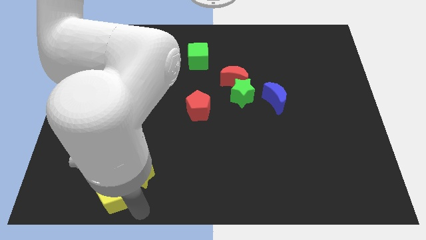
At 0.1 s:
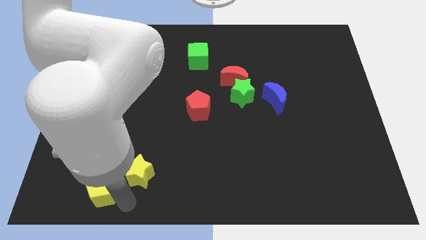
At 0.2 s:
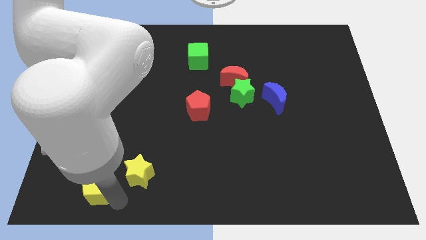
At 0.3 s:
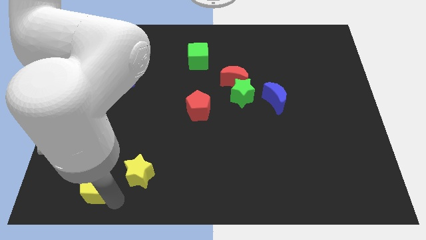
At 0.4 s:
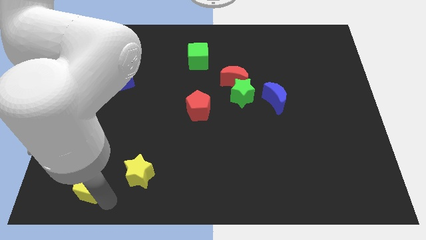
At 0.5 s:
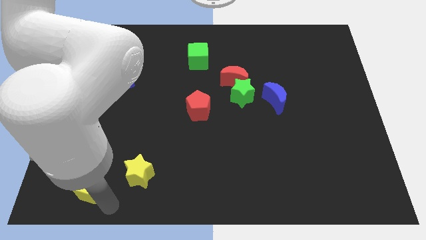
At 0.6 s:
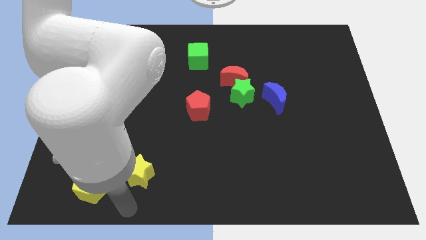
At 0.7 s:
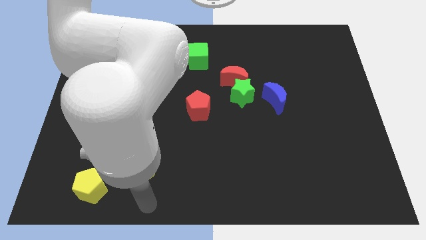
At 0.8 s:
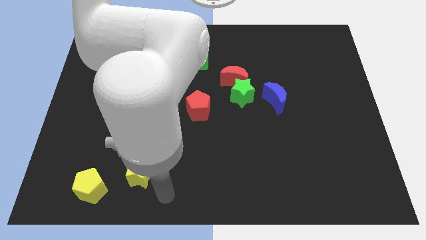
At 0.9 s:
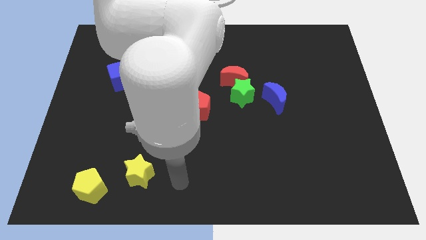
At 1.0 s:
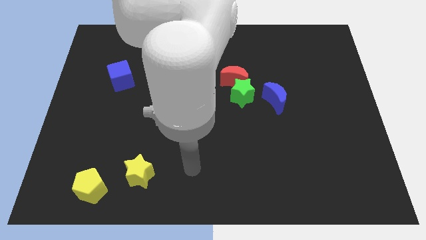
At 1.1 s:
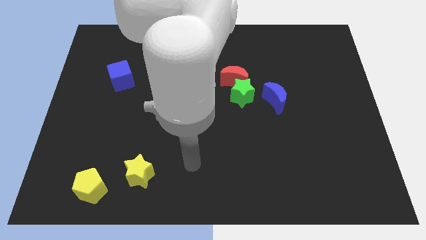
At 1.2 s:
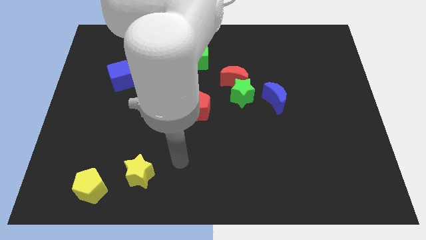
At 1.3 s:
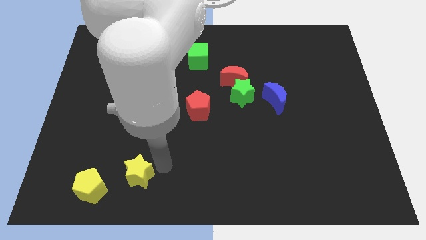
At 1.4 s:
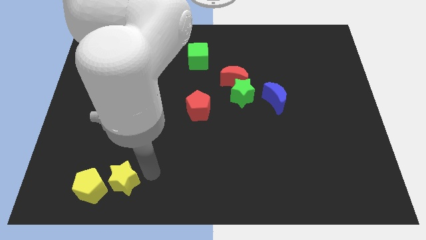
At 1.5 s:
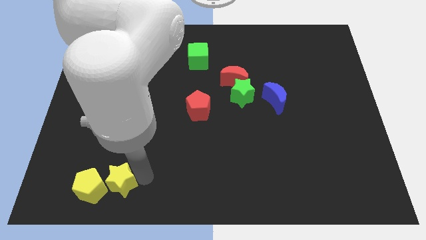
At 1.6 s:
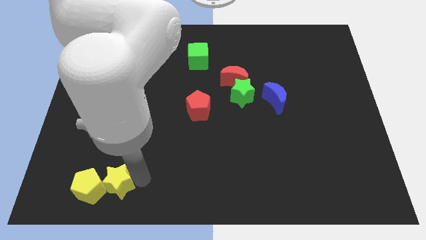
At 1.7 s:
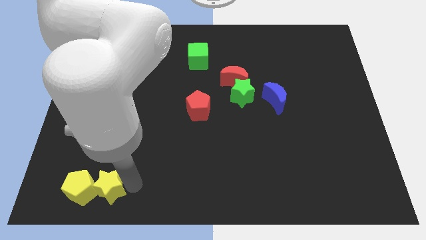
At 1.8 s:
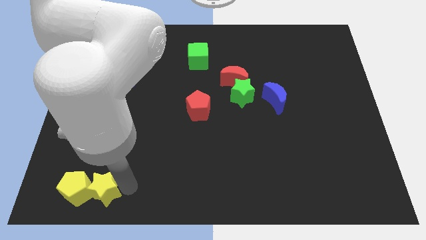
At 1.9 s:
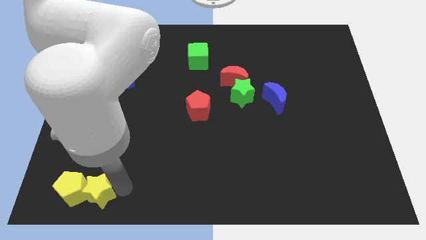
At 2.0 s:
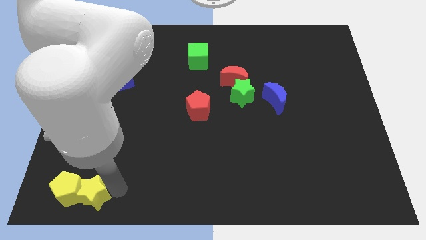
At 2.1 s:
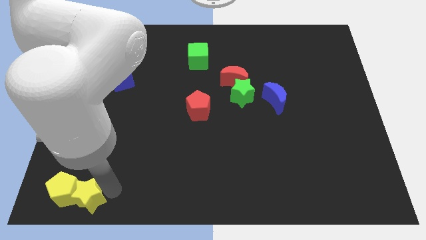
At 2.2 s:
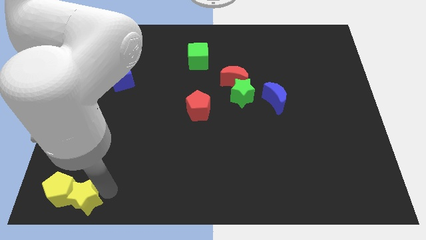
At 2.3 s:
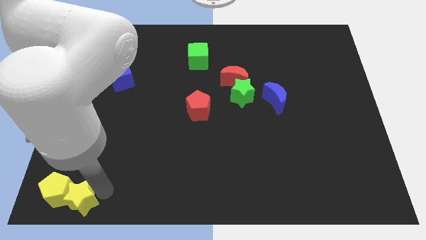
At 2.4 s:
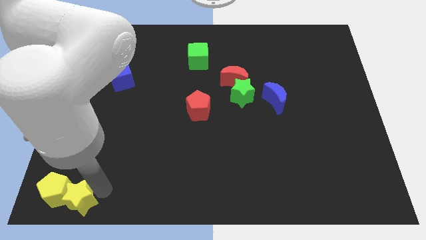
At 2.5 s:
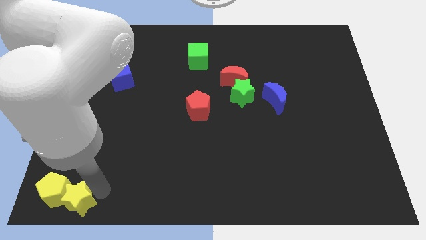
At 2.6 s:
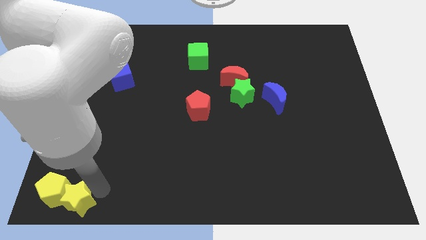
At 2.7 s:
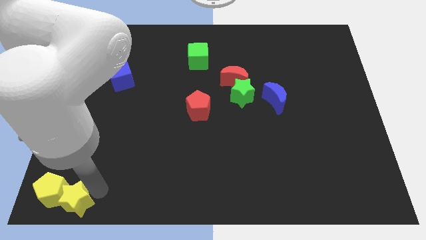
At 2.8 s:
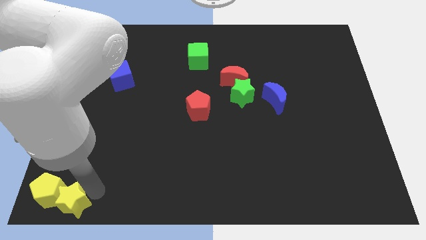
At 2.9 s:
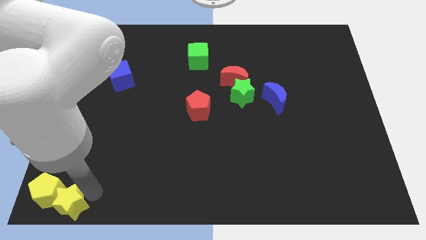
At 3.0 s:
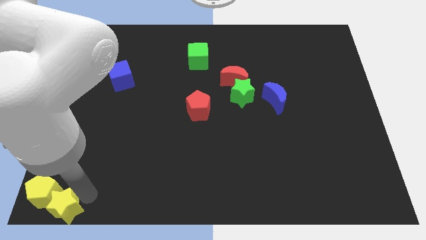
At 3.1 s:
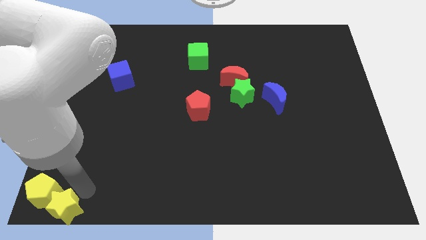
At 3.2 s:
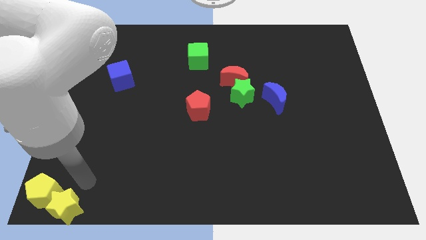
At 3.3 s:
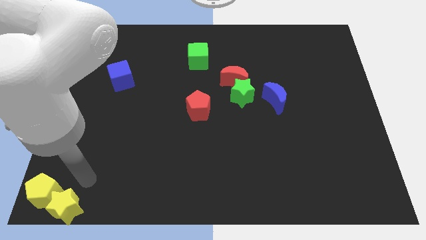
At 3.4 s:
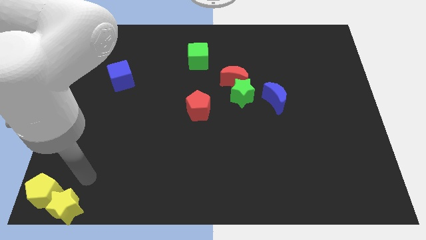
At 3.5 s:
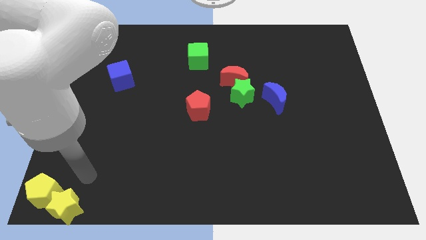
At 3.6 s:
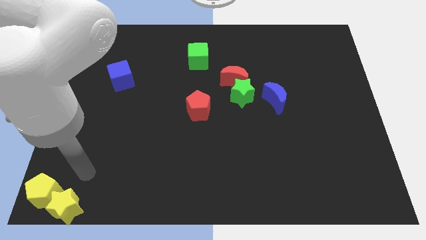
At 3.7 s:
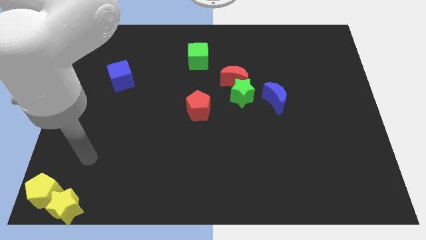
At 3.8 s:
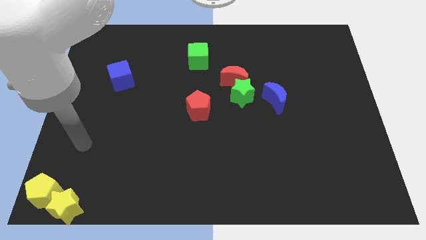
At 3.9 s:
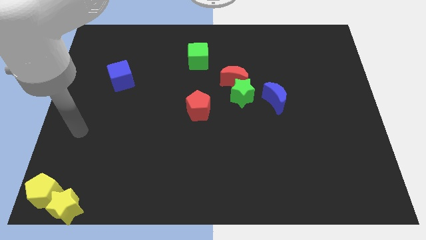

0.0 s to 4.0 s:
move the yellow star into the yellow pentagon to the bottom left corner

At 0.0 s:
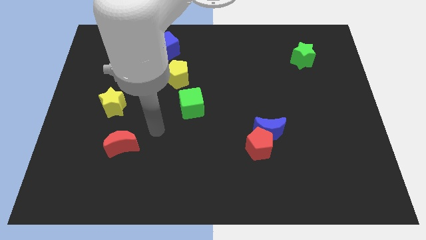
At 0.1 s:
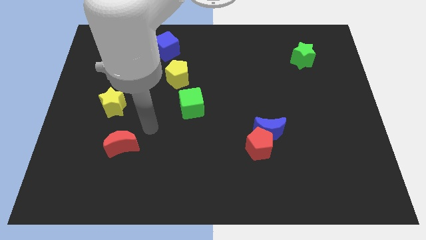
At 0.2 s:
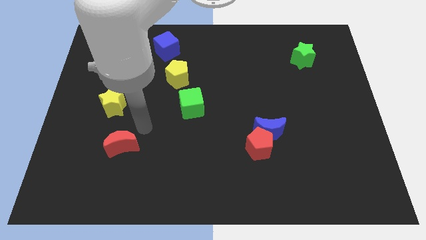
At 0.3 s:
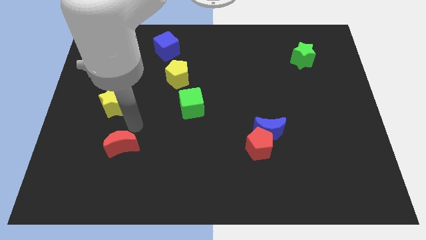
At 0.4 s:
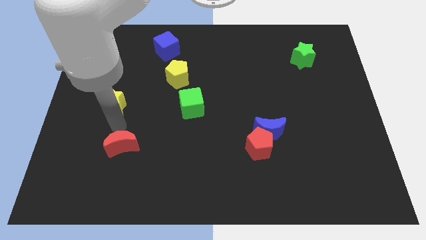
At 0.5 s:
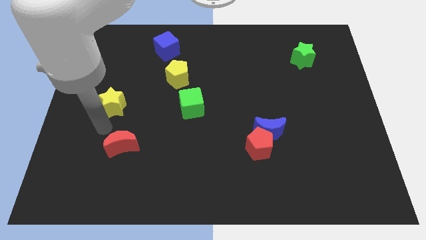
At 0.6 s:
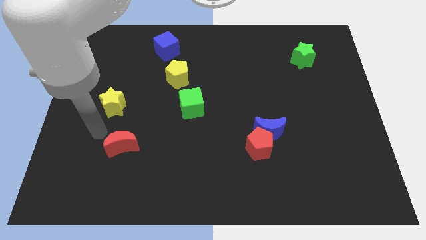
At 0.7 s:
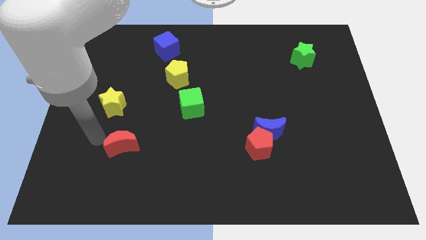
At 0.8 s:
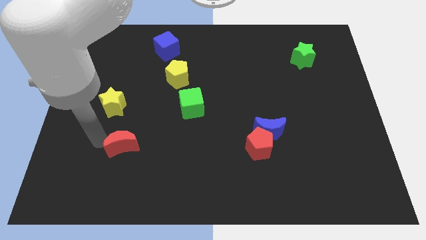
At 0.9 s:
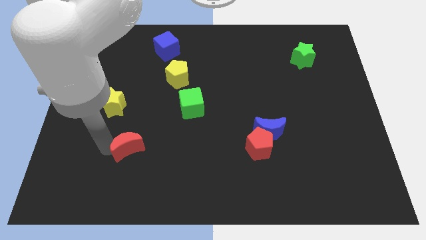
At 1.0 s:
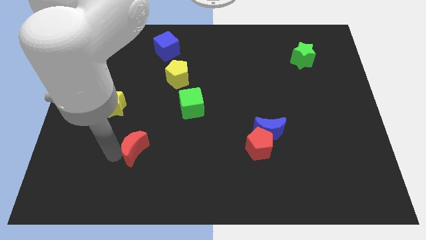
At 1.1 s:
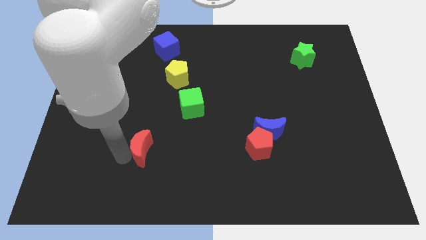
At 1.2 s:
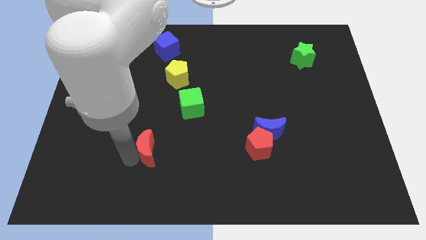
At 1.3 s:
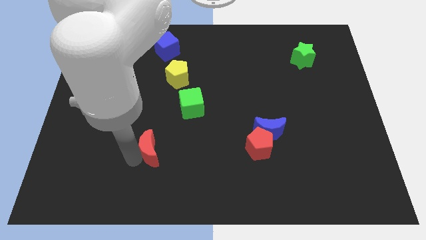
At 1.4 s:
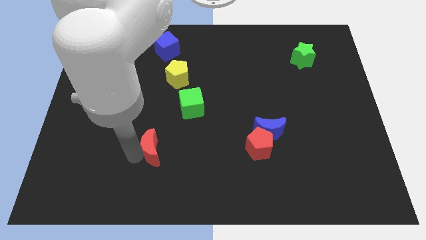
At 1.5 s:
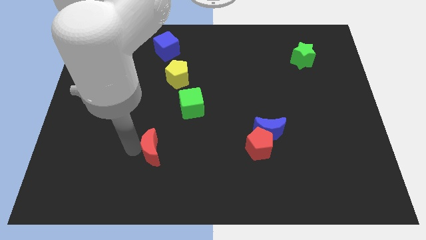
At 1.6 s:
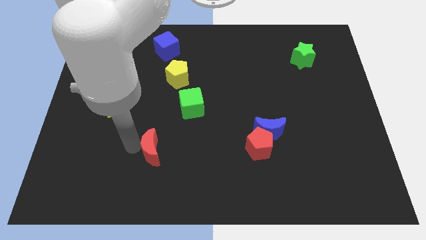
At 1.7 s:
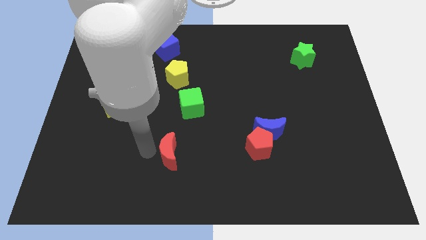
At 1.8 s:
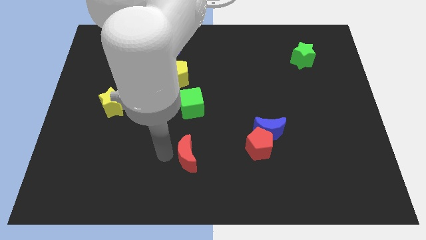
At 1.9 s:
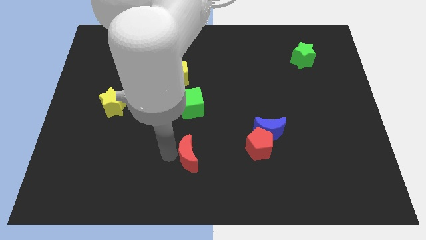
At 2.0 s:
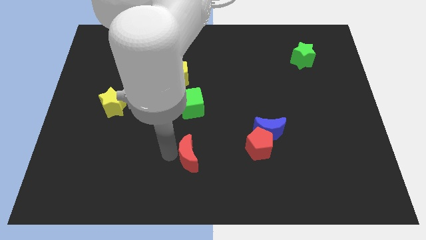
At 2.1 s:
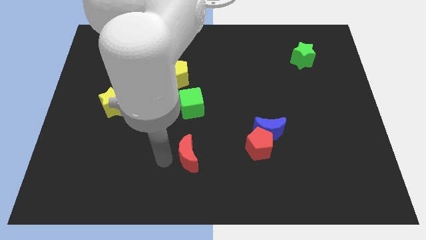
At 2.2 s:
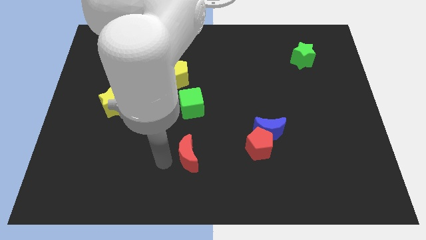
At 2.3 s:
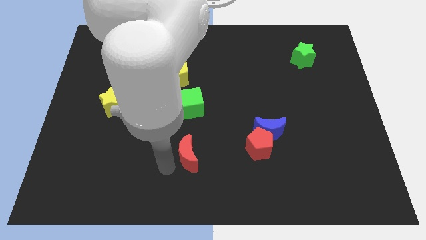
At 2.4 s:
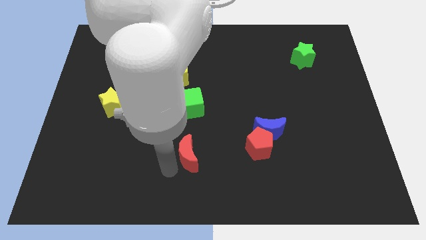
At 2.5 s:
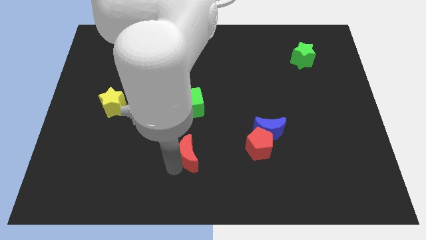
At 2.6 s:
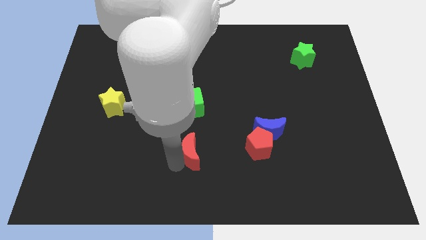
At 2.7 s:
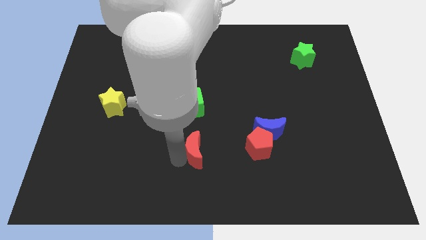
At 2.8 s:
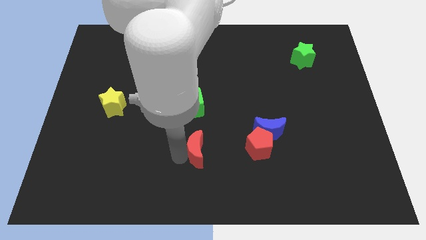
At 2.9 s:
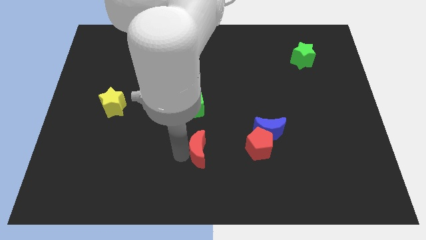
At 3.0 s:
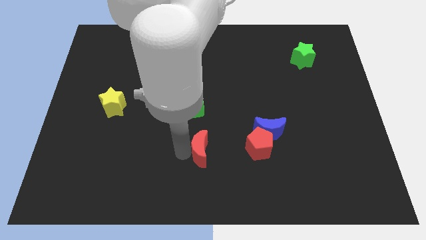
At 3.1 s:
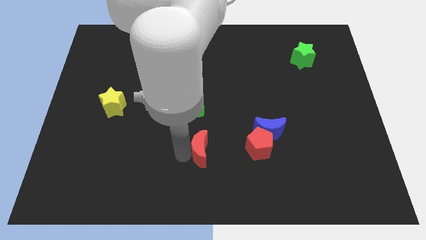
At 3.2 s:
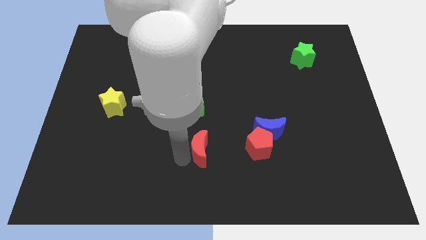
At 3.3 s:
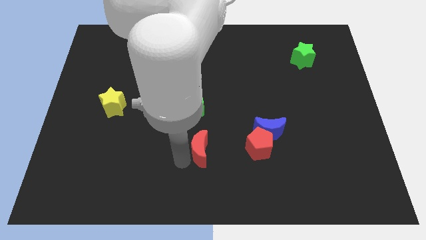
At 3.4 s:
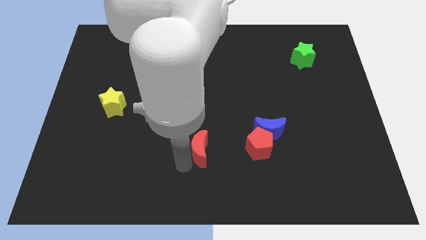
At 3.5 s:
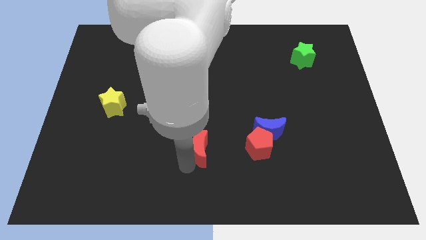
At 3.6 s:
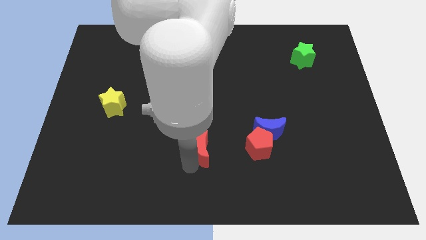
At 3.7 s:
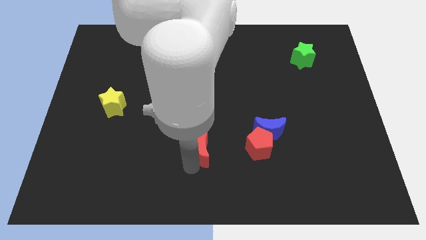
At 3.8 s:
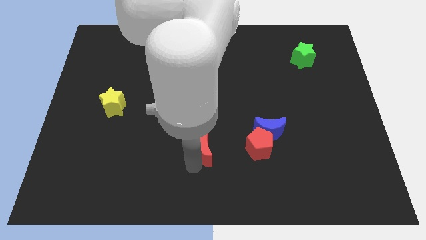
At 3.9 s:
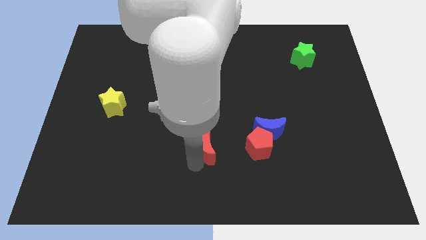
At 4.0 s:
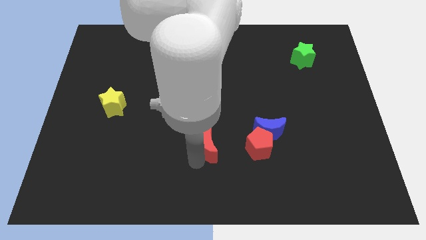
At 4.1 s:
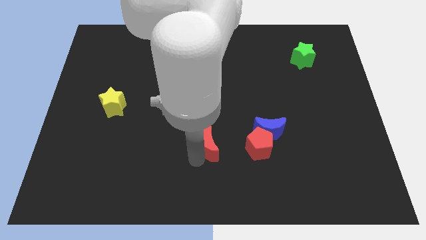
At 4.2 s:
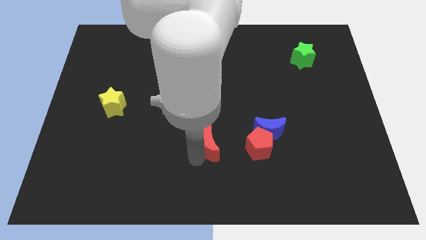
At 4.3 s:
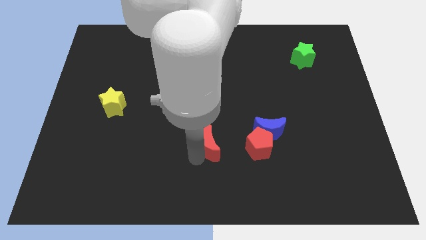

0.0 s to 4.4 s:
put the red crescent at the bottom of green cube

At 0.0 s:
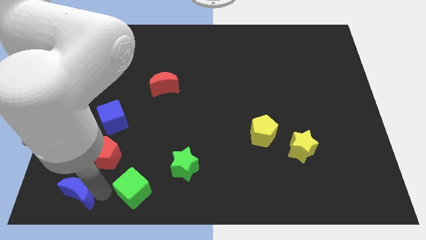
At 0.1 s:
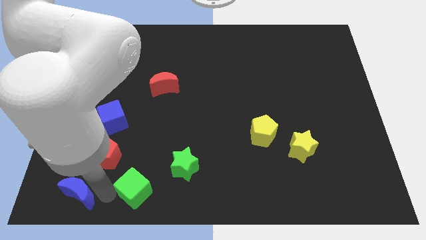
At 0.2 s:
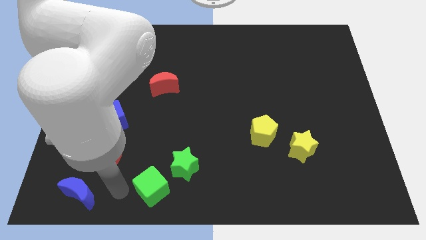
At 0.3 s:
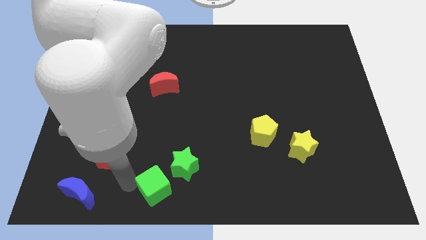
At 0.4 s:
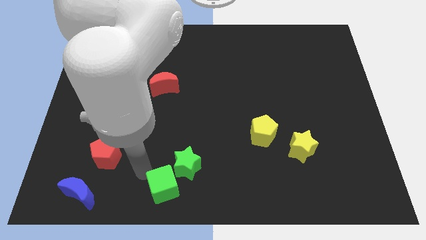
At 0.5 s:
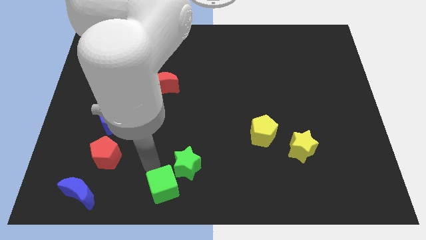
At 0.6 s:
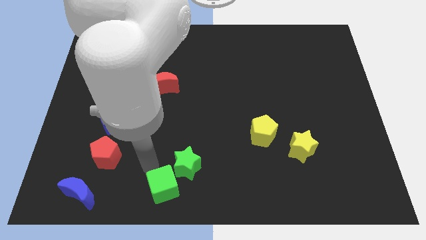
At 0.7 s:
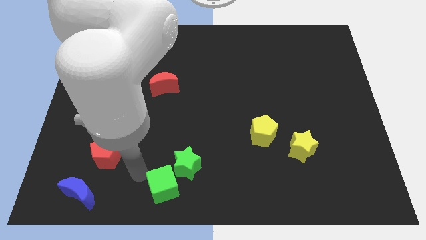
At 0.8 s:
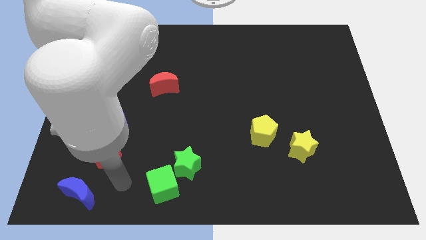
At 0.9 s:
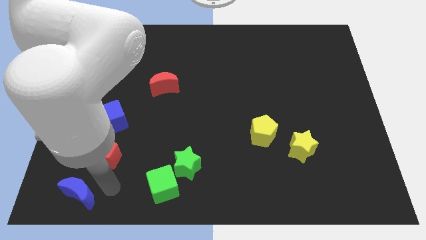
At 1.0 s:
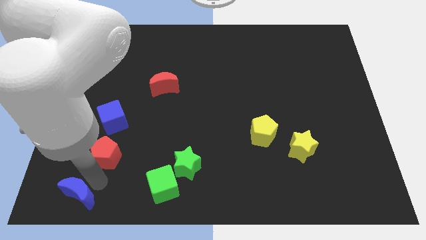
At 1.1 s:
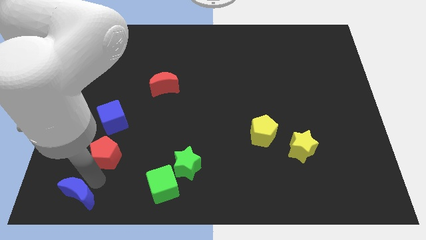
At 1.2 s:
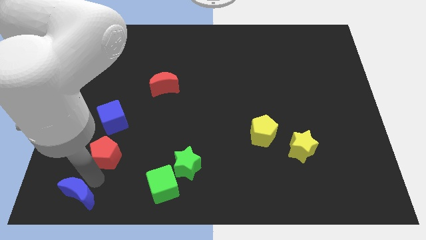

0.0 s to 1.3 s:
move the green cube into the green star
